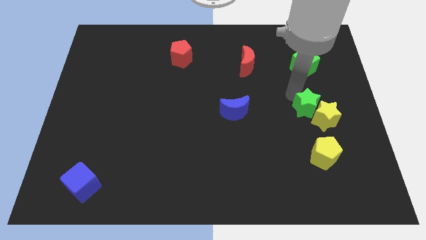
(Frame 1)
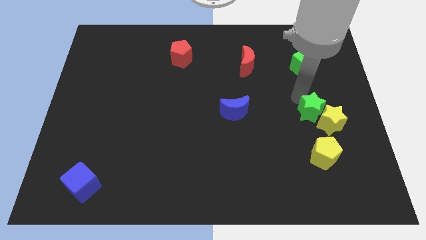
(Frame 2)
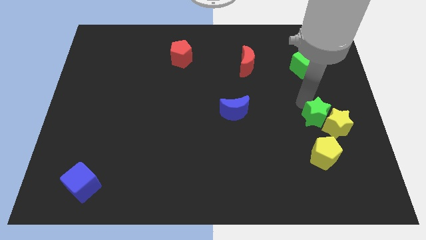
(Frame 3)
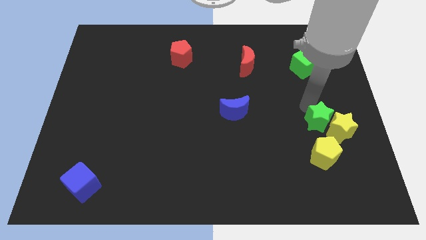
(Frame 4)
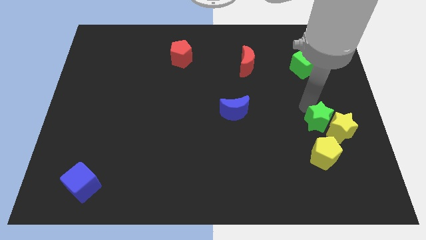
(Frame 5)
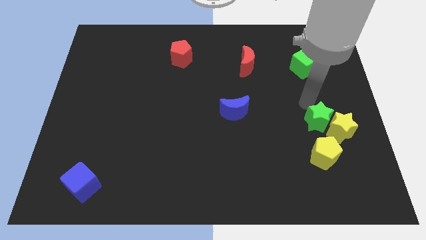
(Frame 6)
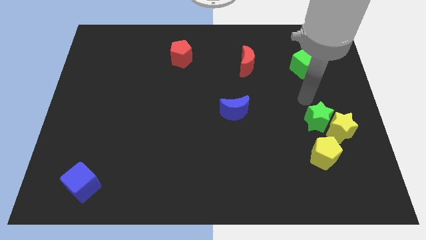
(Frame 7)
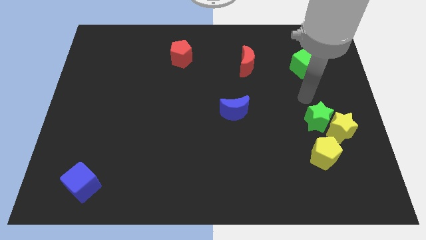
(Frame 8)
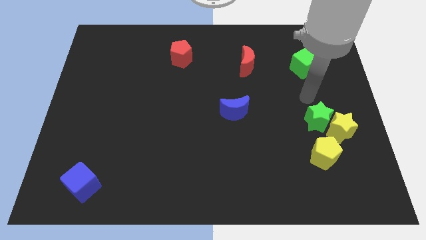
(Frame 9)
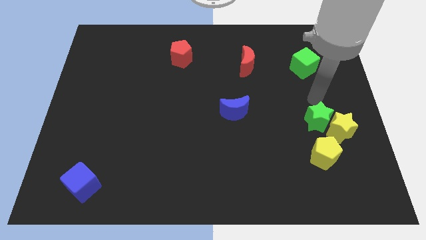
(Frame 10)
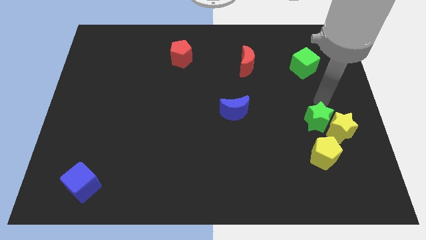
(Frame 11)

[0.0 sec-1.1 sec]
push the group of stars towards the yellow pentagon

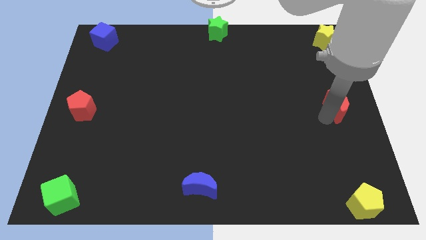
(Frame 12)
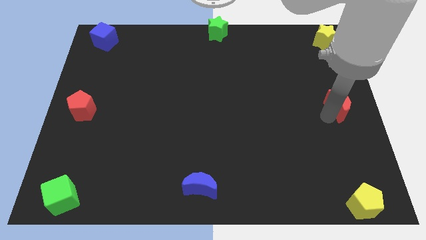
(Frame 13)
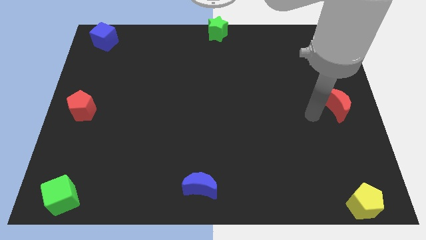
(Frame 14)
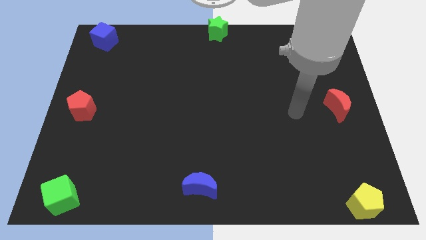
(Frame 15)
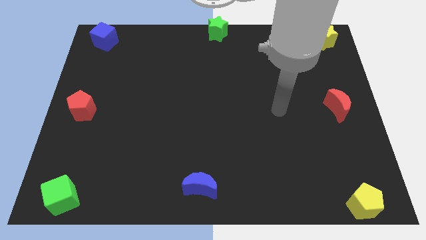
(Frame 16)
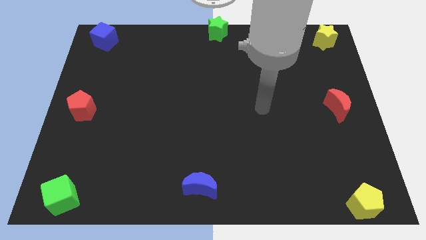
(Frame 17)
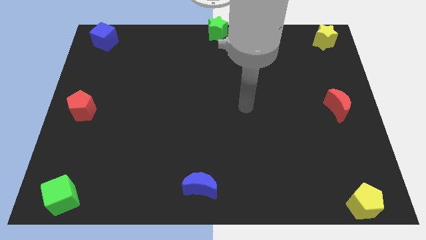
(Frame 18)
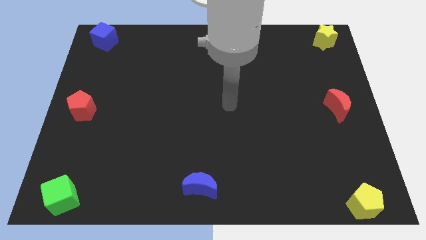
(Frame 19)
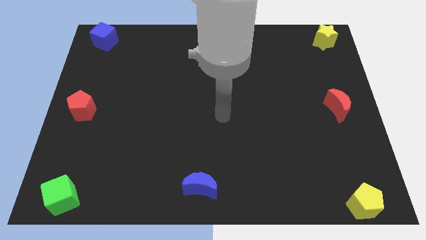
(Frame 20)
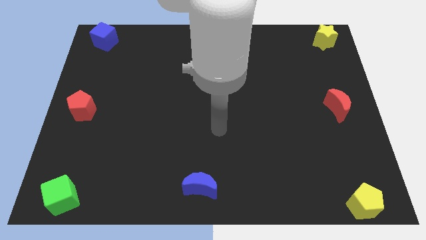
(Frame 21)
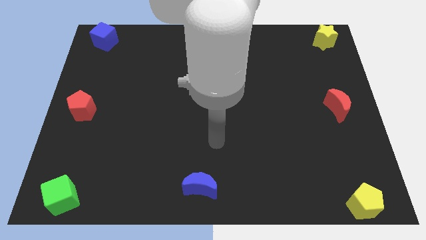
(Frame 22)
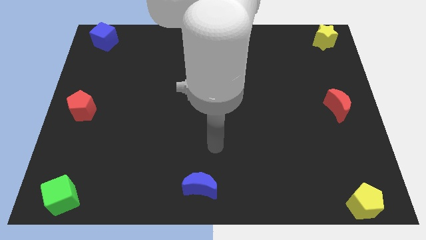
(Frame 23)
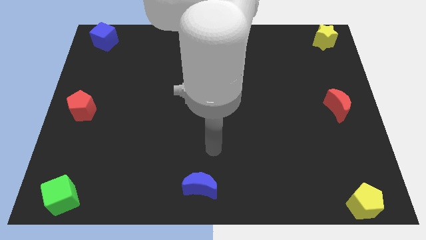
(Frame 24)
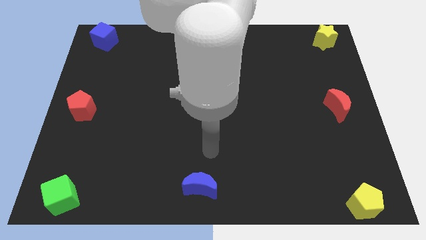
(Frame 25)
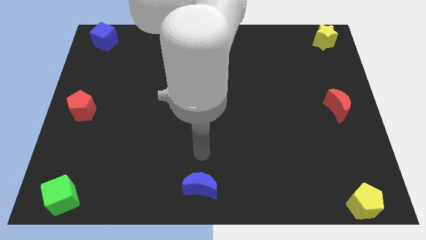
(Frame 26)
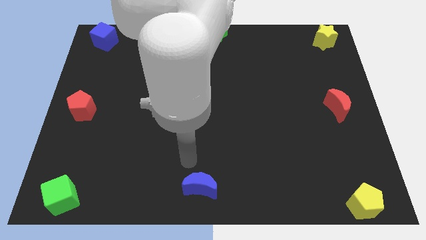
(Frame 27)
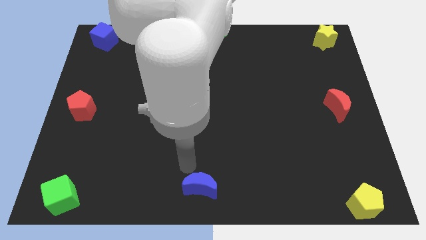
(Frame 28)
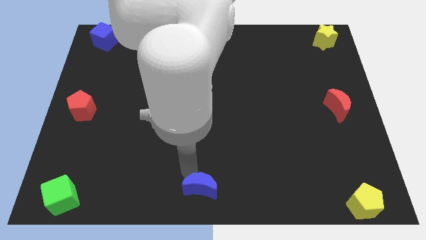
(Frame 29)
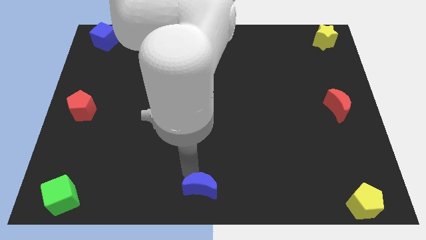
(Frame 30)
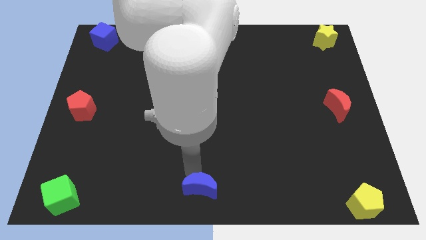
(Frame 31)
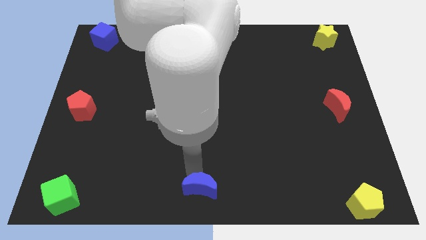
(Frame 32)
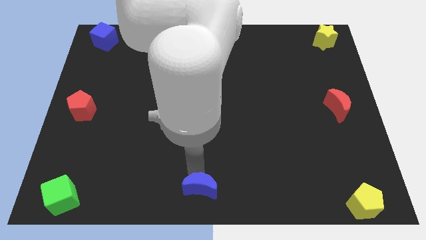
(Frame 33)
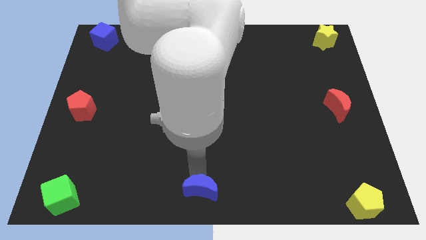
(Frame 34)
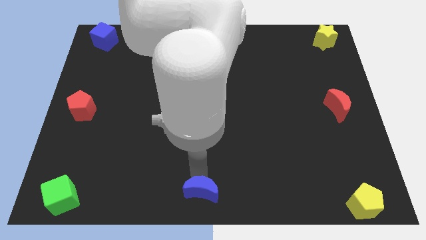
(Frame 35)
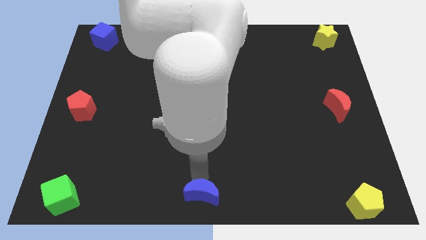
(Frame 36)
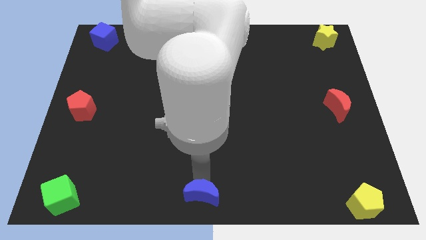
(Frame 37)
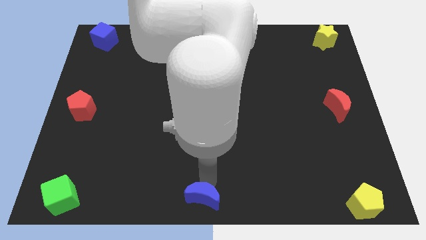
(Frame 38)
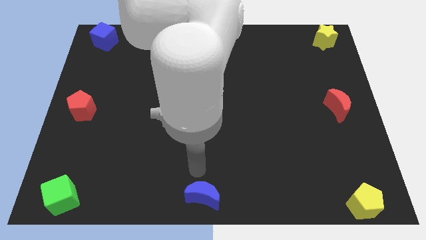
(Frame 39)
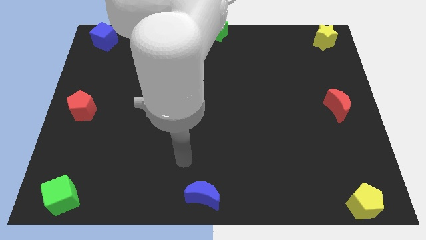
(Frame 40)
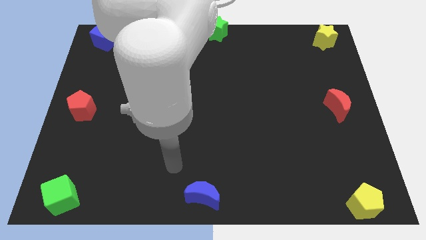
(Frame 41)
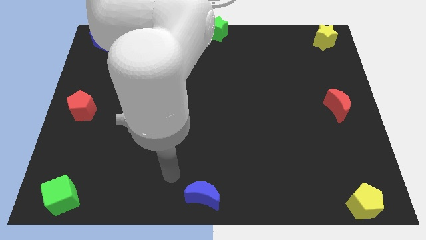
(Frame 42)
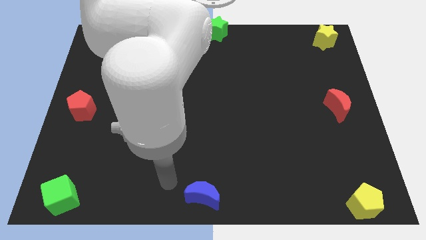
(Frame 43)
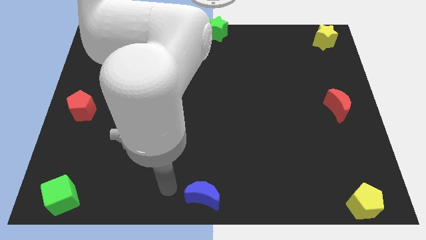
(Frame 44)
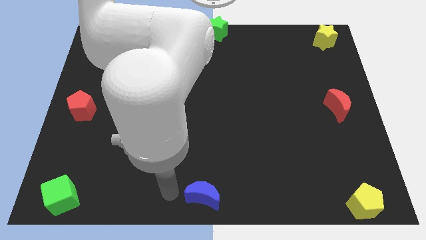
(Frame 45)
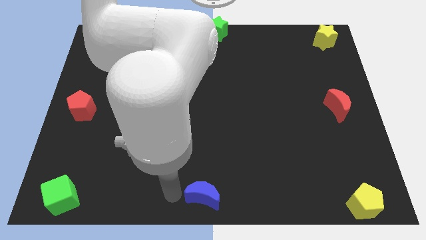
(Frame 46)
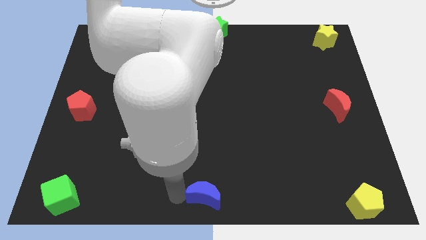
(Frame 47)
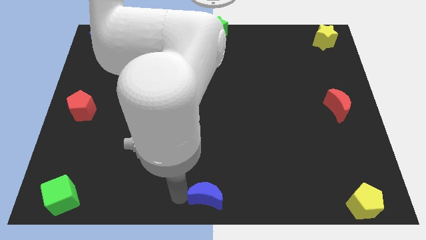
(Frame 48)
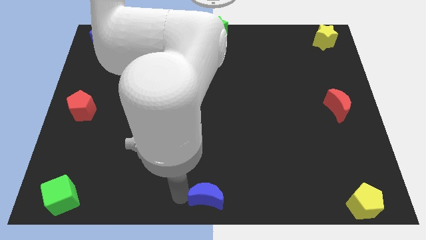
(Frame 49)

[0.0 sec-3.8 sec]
push red crescent slightly forward

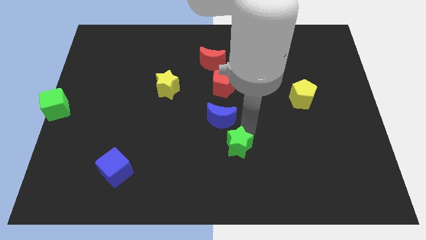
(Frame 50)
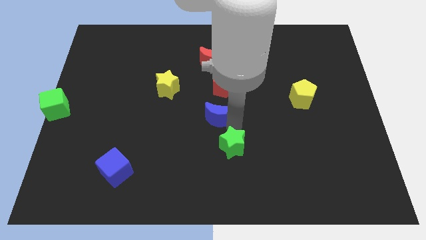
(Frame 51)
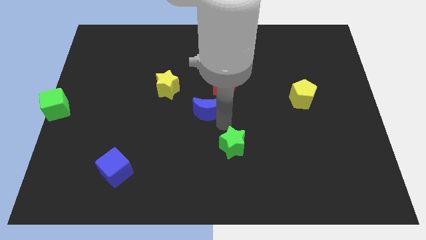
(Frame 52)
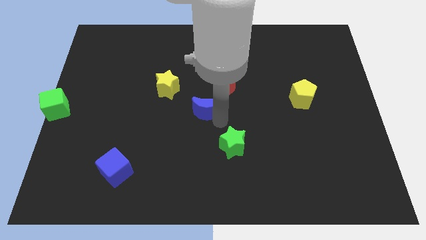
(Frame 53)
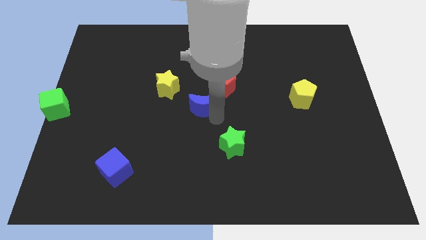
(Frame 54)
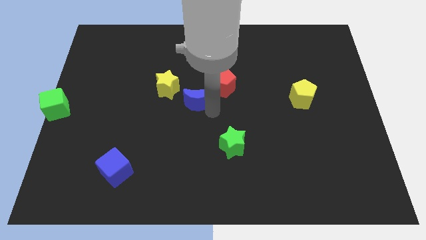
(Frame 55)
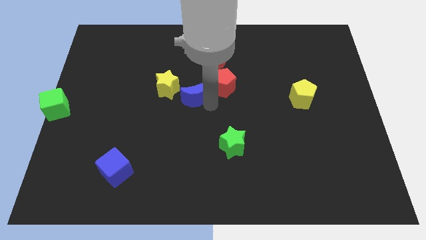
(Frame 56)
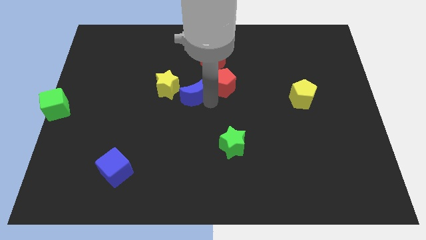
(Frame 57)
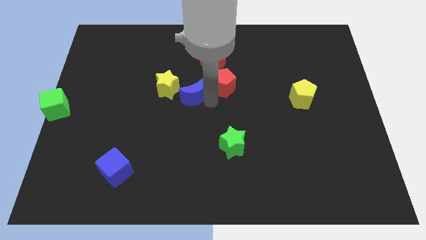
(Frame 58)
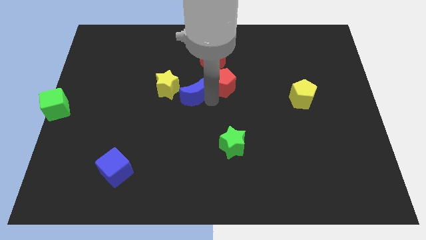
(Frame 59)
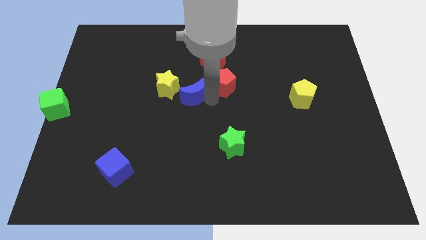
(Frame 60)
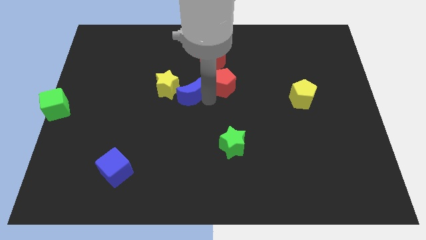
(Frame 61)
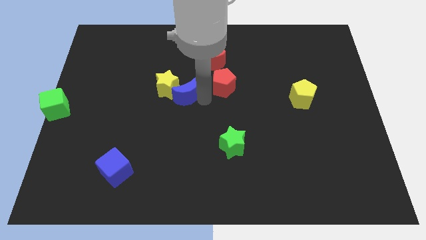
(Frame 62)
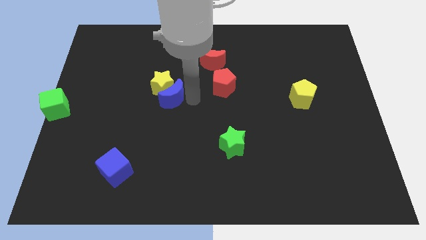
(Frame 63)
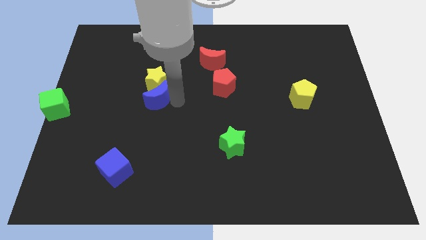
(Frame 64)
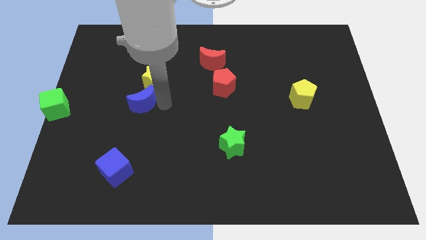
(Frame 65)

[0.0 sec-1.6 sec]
move the blue crescent to the bottom of the yellow star

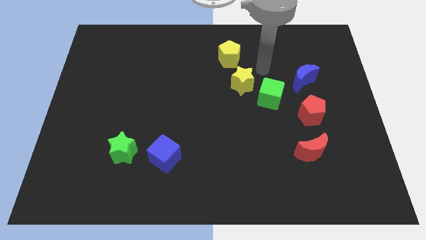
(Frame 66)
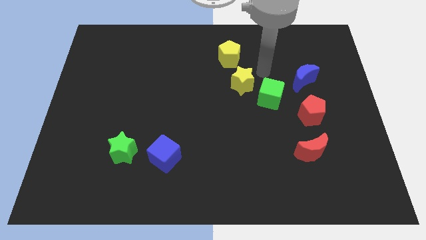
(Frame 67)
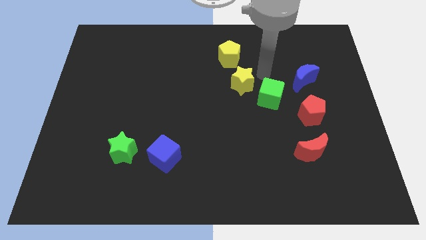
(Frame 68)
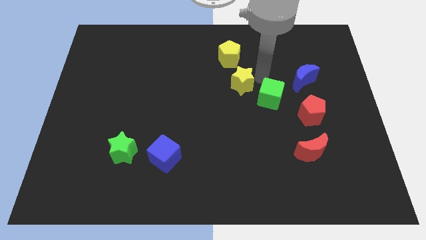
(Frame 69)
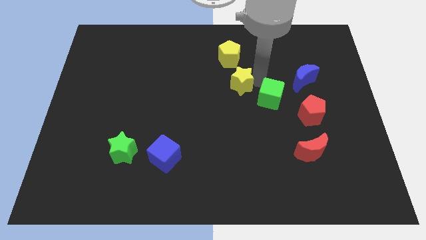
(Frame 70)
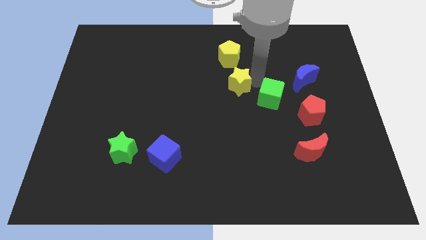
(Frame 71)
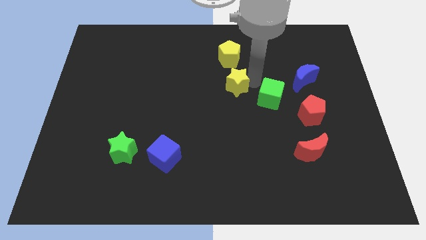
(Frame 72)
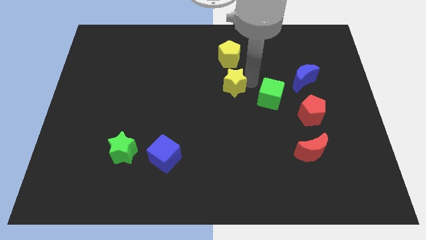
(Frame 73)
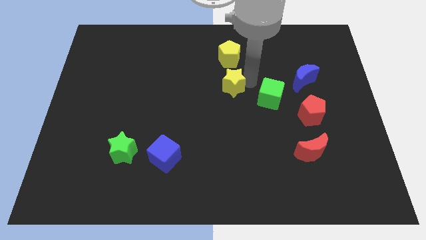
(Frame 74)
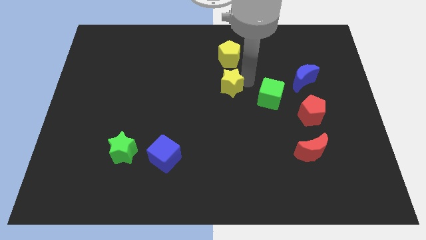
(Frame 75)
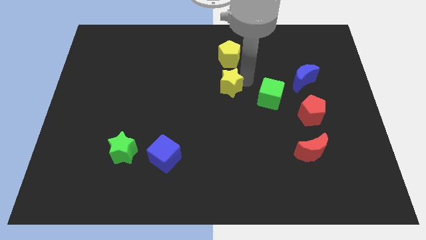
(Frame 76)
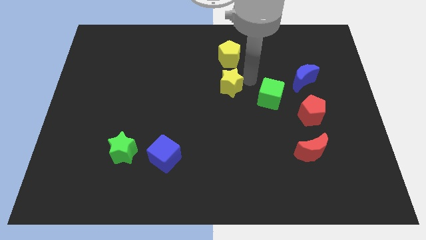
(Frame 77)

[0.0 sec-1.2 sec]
place the yellow star to the bottom of the yellow pentagon

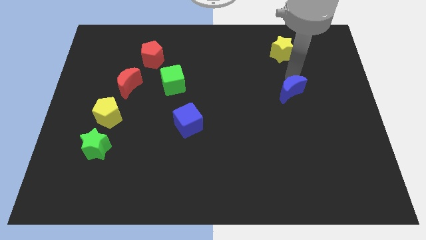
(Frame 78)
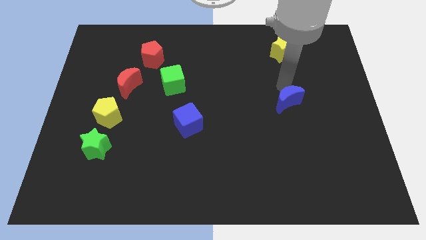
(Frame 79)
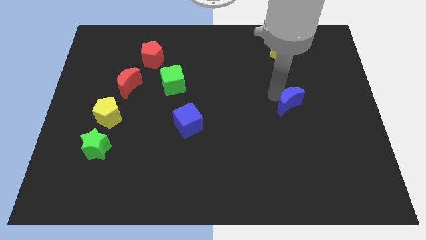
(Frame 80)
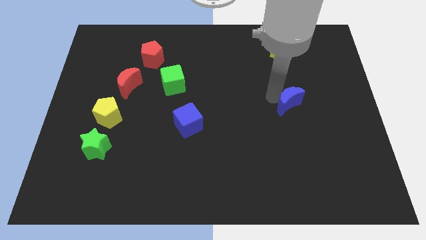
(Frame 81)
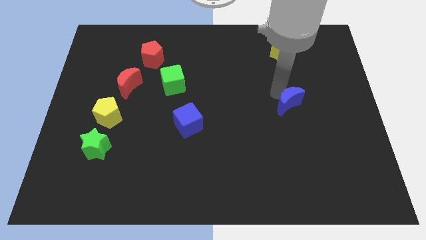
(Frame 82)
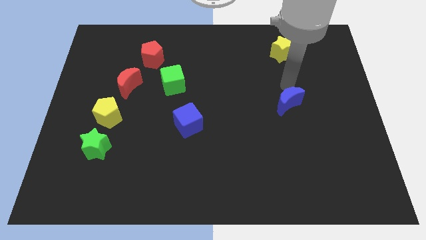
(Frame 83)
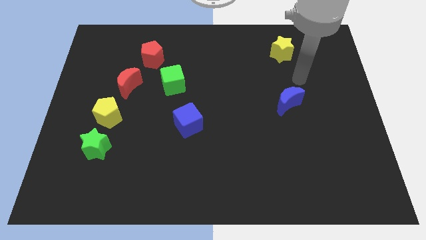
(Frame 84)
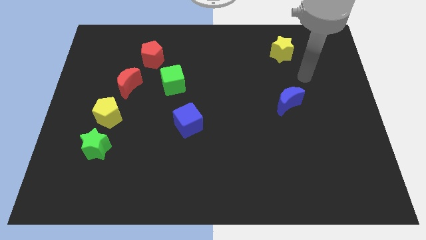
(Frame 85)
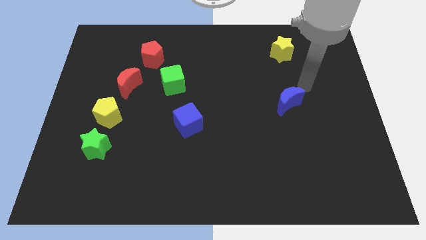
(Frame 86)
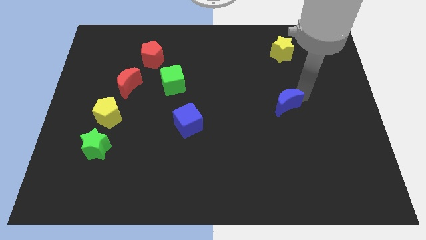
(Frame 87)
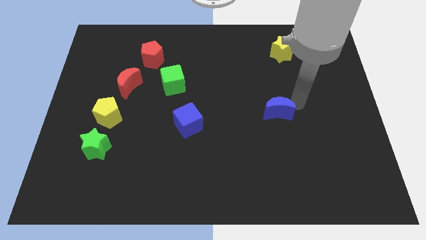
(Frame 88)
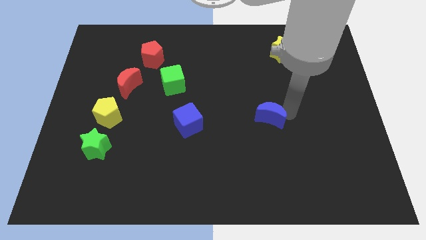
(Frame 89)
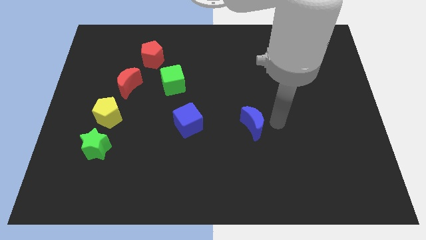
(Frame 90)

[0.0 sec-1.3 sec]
put the blue moon right to the blue cube
